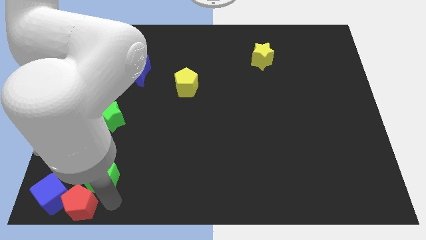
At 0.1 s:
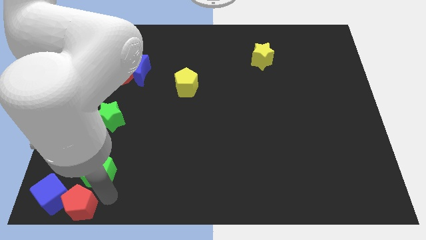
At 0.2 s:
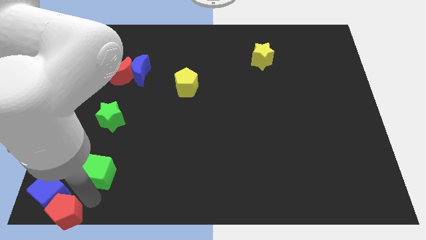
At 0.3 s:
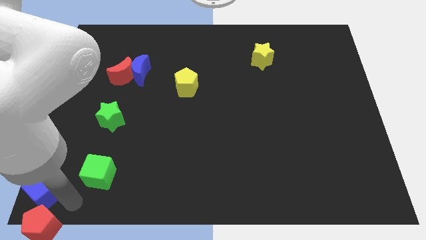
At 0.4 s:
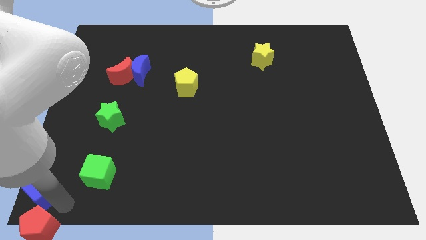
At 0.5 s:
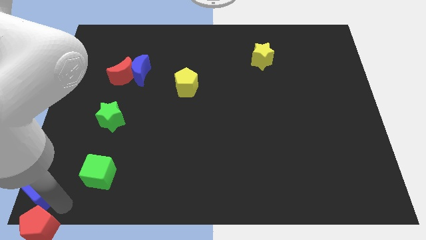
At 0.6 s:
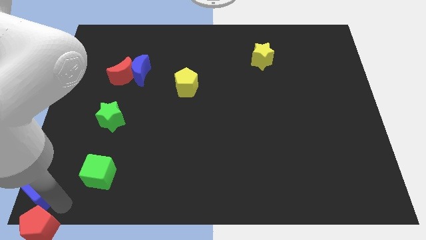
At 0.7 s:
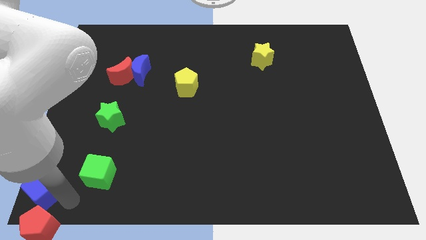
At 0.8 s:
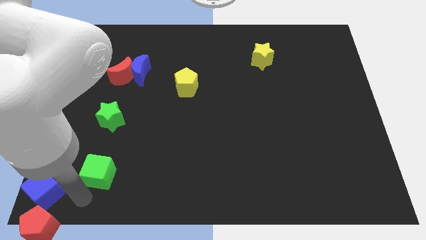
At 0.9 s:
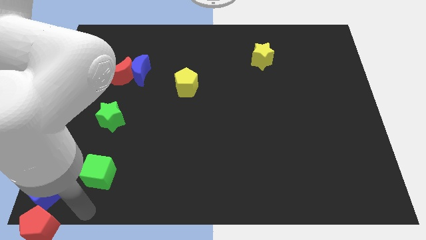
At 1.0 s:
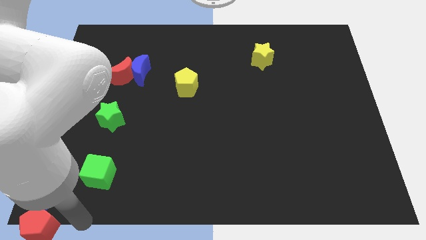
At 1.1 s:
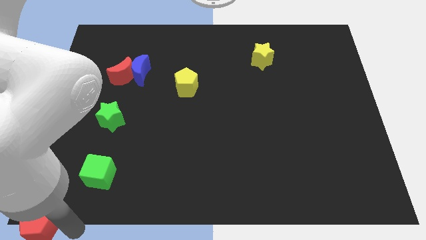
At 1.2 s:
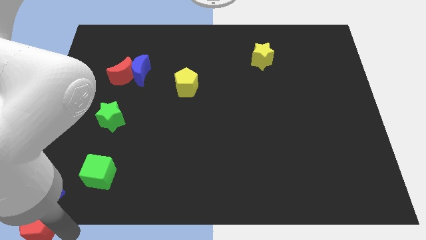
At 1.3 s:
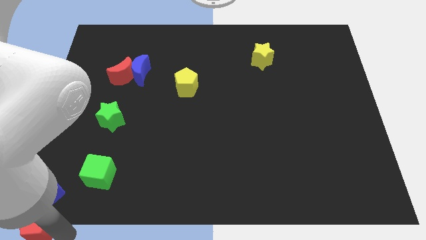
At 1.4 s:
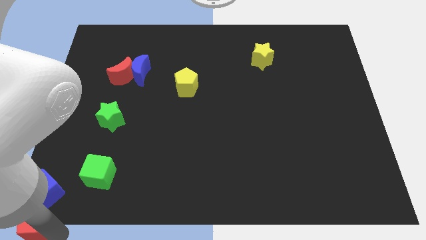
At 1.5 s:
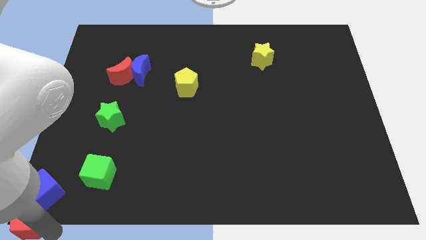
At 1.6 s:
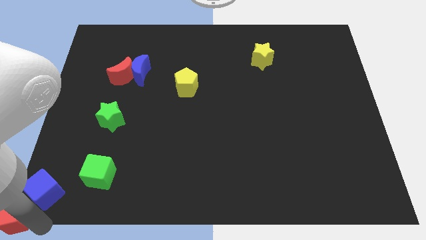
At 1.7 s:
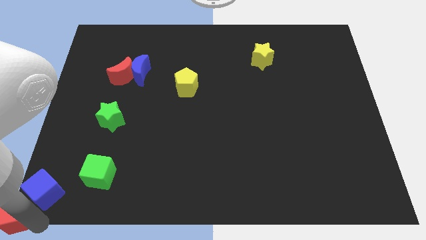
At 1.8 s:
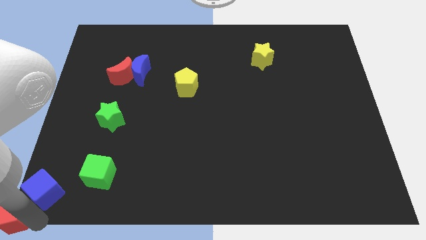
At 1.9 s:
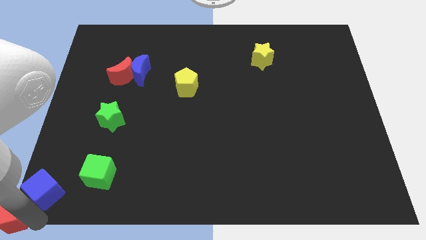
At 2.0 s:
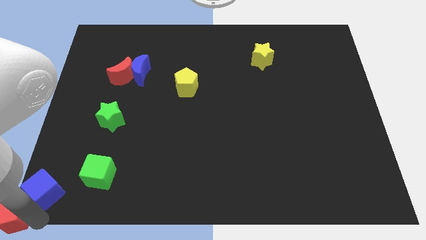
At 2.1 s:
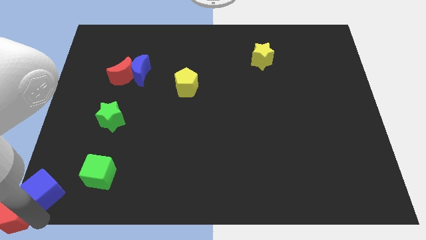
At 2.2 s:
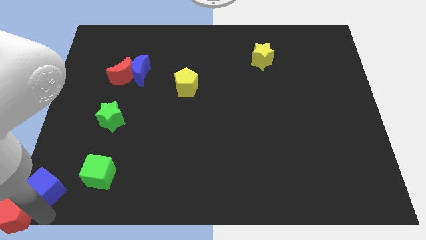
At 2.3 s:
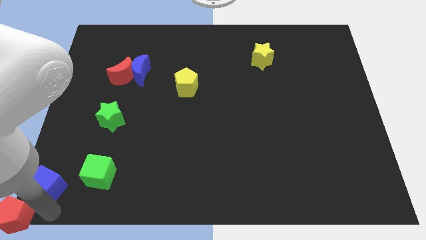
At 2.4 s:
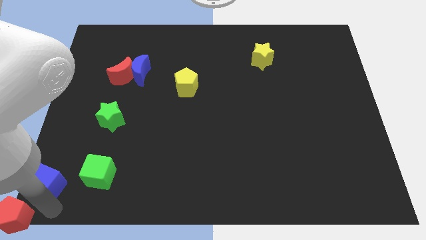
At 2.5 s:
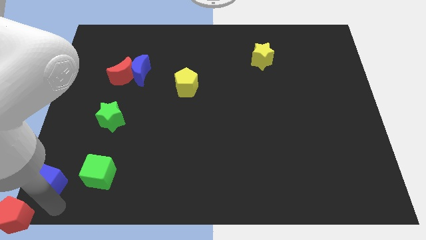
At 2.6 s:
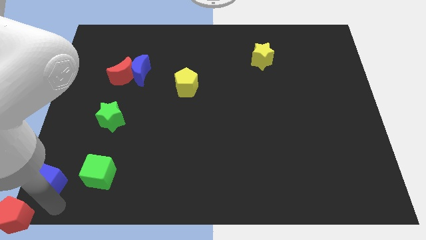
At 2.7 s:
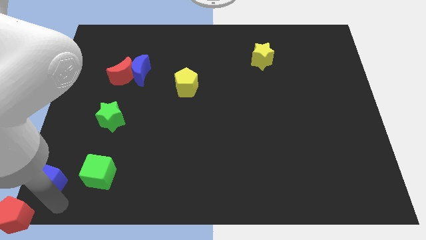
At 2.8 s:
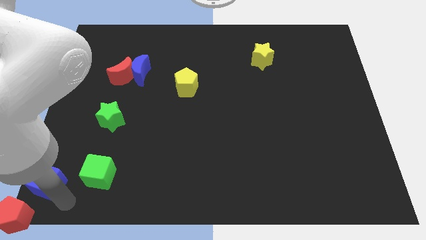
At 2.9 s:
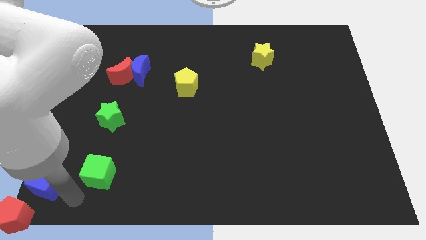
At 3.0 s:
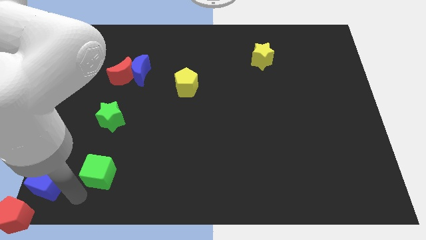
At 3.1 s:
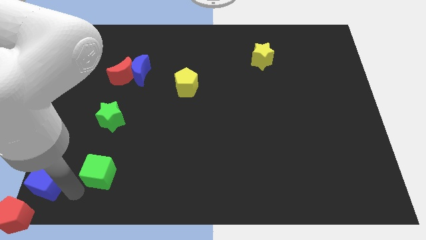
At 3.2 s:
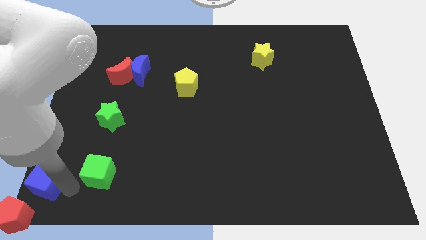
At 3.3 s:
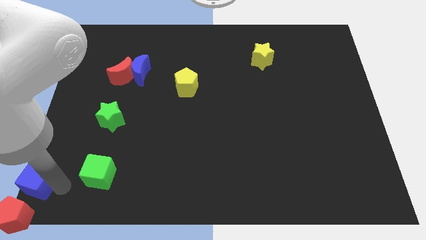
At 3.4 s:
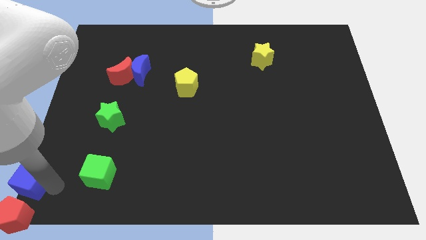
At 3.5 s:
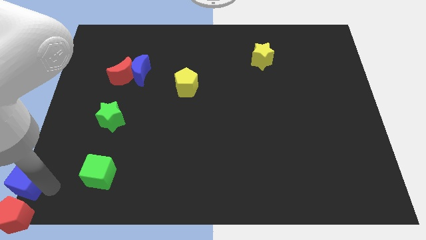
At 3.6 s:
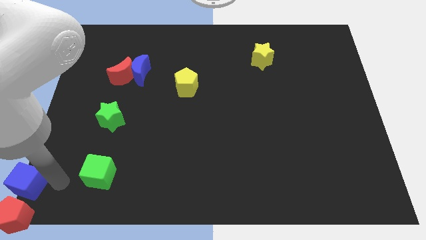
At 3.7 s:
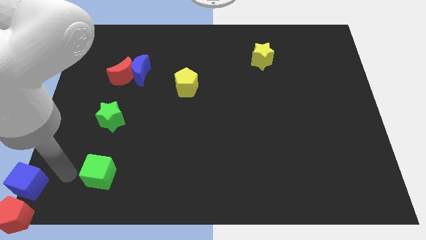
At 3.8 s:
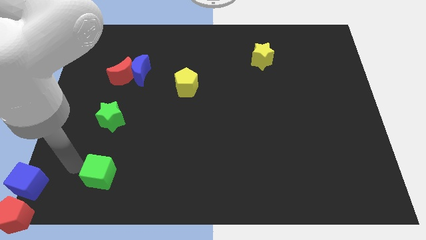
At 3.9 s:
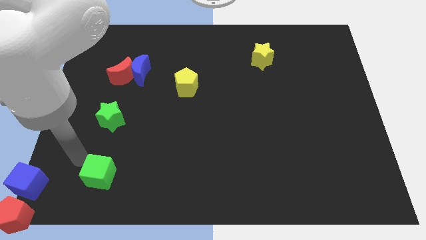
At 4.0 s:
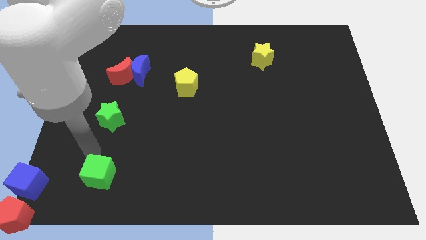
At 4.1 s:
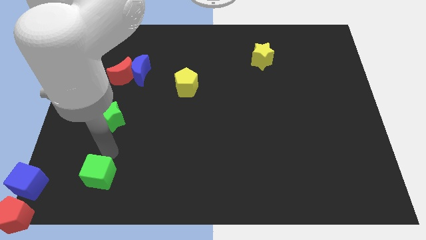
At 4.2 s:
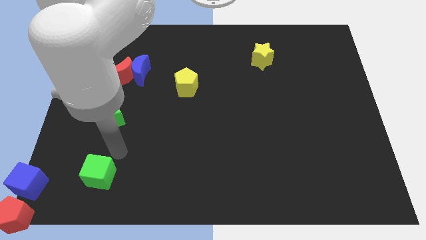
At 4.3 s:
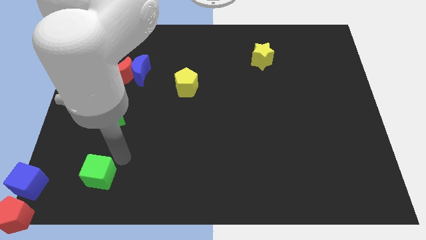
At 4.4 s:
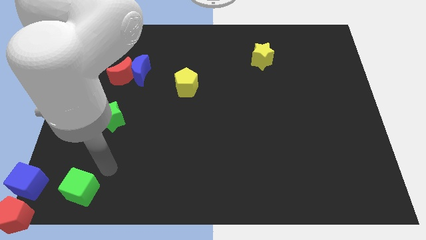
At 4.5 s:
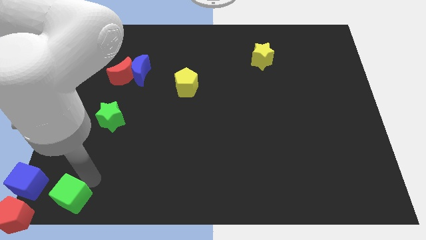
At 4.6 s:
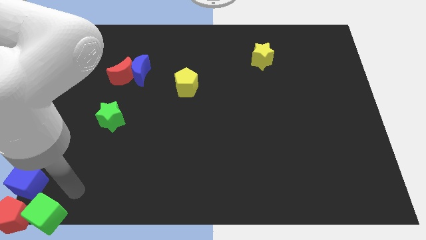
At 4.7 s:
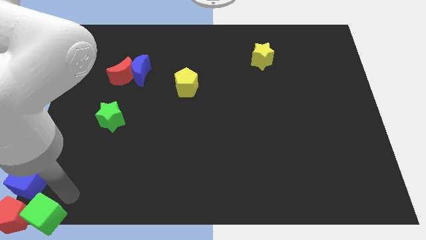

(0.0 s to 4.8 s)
move the green cube into the red pentagon

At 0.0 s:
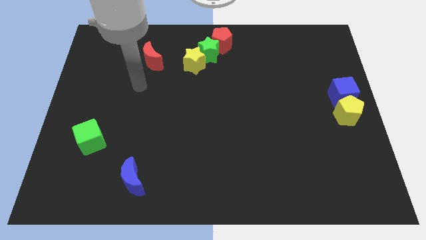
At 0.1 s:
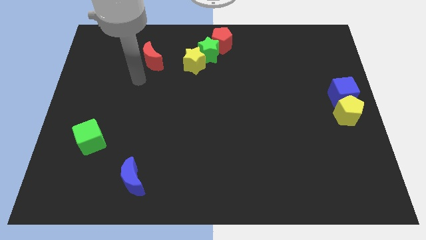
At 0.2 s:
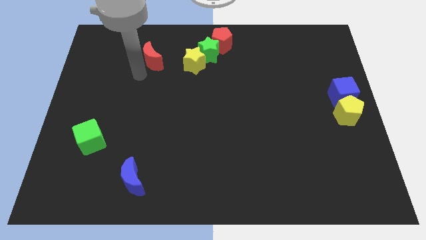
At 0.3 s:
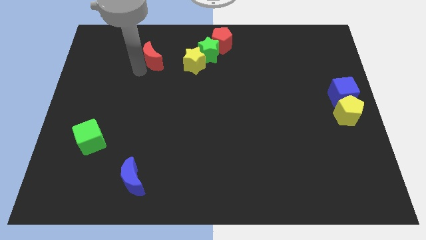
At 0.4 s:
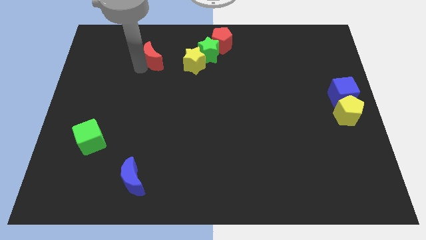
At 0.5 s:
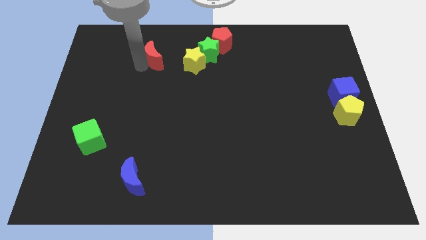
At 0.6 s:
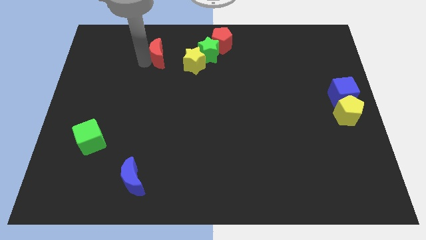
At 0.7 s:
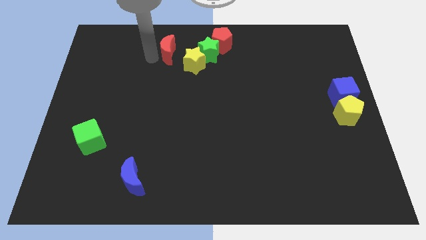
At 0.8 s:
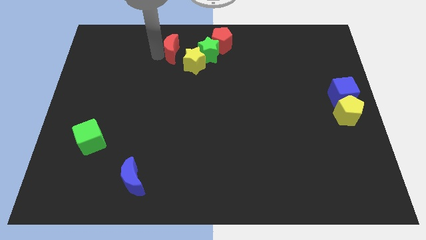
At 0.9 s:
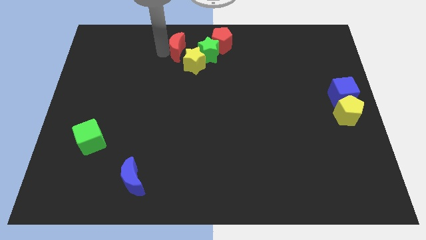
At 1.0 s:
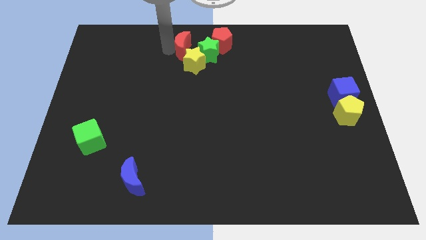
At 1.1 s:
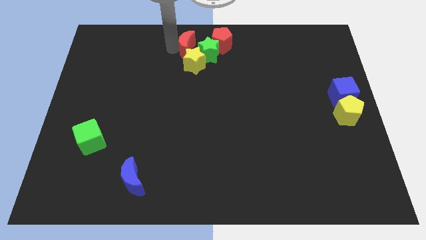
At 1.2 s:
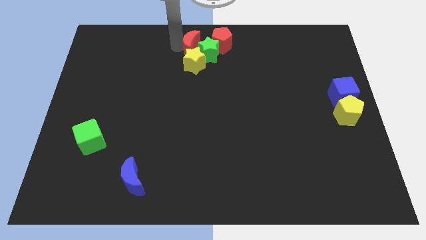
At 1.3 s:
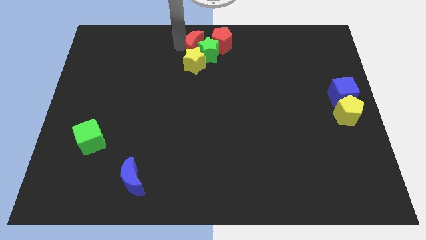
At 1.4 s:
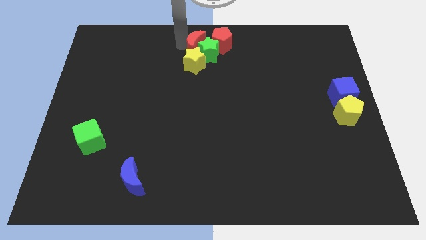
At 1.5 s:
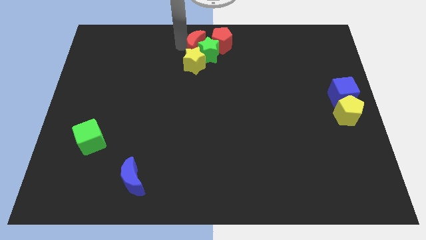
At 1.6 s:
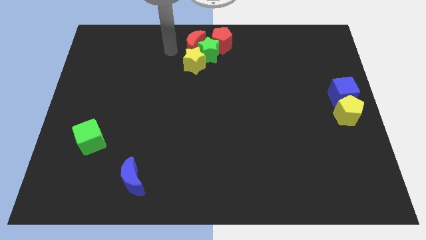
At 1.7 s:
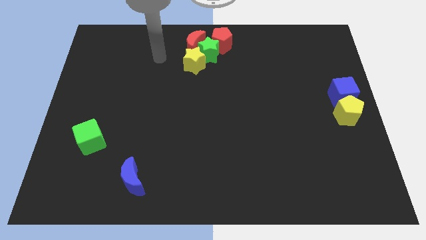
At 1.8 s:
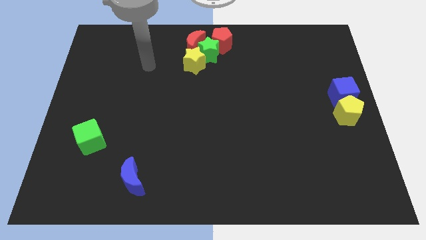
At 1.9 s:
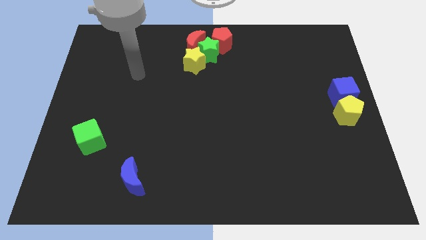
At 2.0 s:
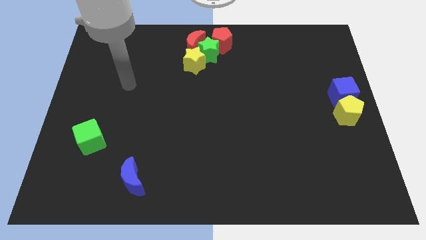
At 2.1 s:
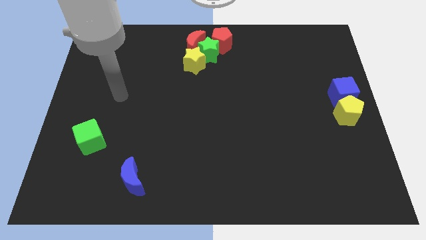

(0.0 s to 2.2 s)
move the red moon into the green star

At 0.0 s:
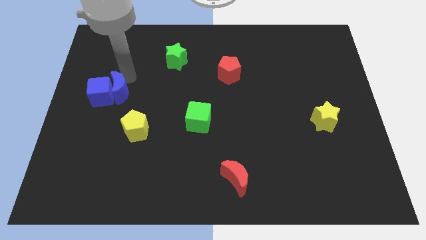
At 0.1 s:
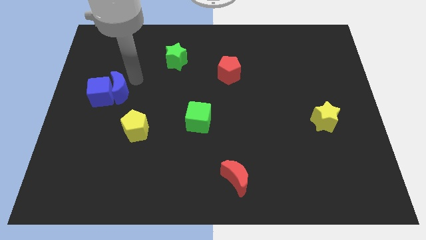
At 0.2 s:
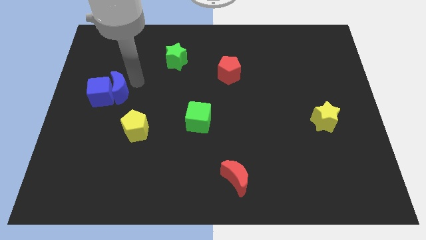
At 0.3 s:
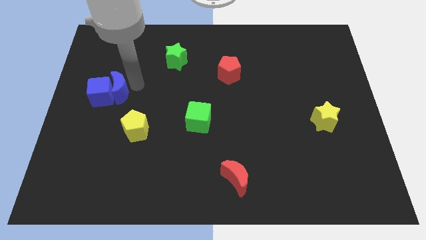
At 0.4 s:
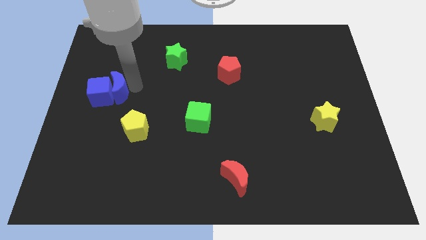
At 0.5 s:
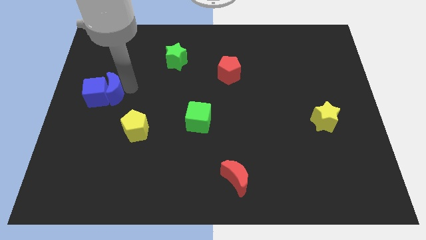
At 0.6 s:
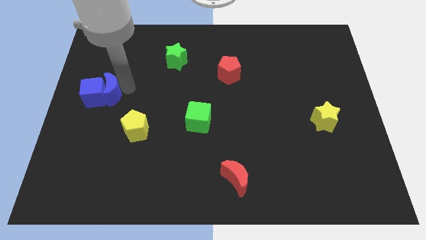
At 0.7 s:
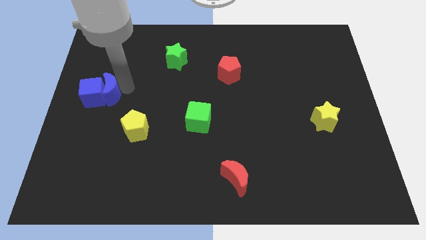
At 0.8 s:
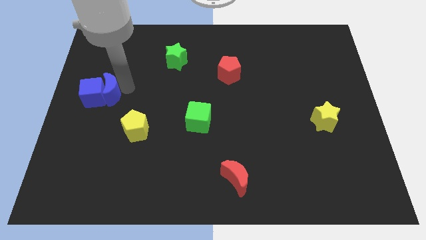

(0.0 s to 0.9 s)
move blue blocks towards center left

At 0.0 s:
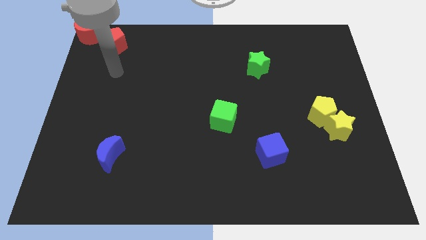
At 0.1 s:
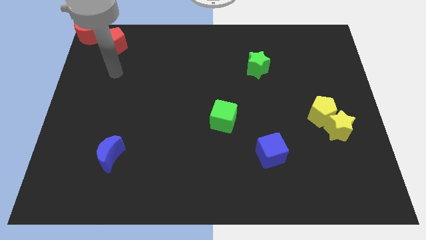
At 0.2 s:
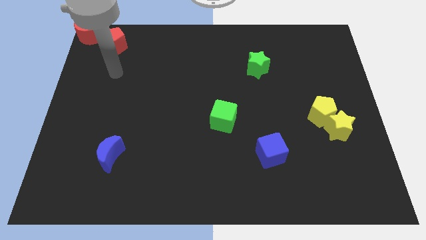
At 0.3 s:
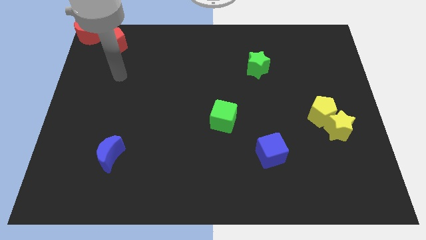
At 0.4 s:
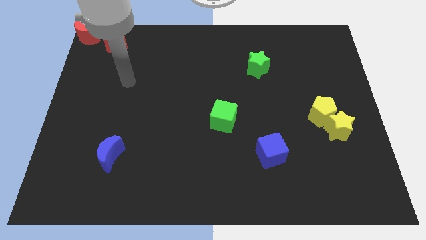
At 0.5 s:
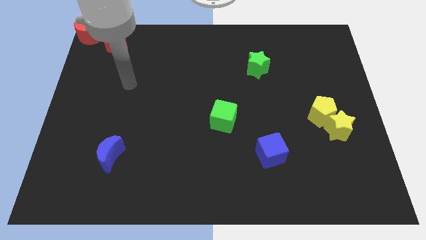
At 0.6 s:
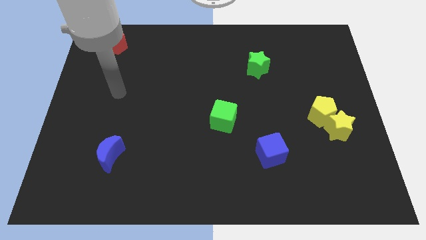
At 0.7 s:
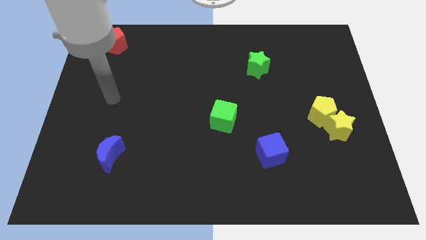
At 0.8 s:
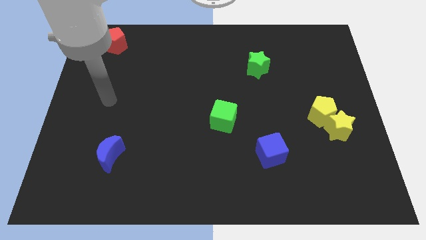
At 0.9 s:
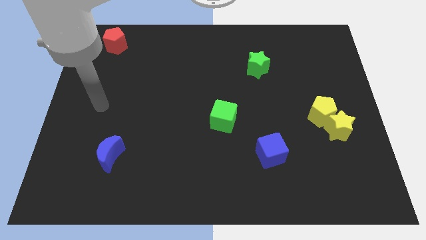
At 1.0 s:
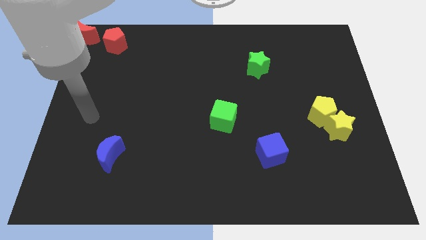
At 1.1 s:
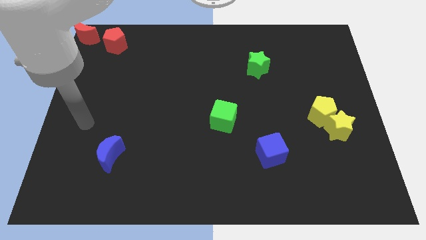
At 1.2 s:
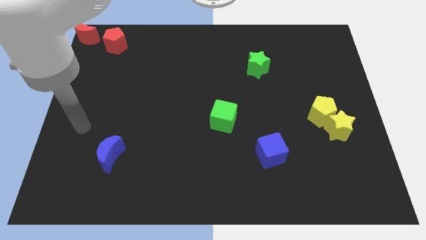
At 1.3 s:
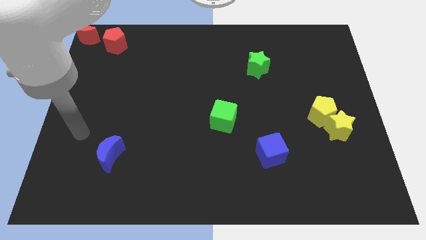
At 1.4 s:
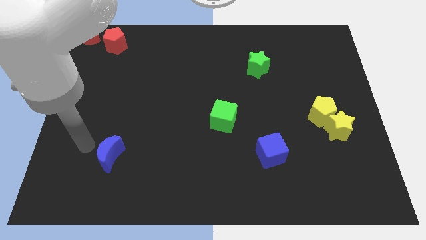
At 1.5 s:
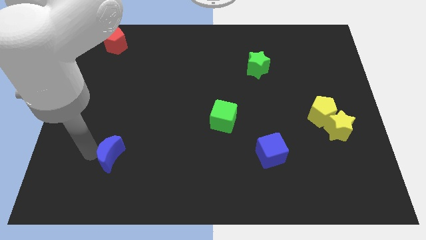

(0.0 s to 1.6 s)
move your arm to the left side of the blue semicircle
